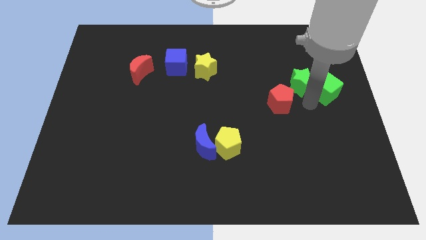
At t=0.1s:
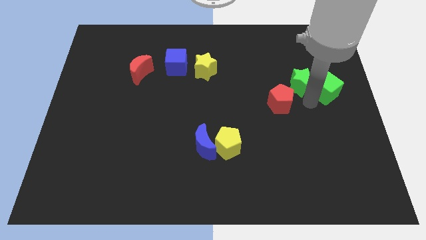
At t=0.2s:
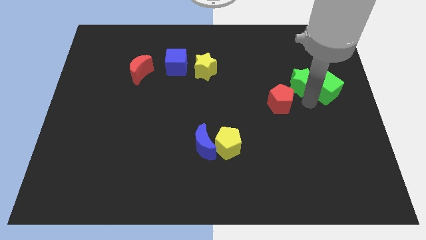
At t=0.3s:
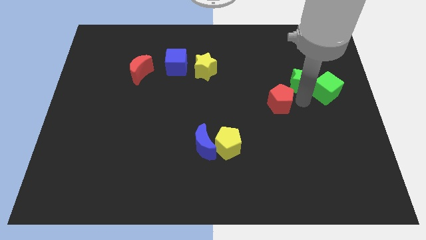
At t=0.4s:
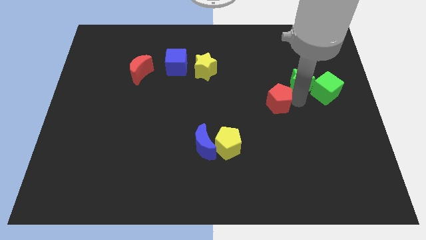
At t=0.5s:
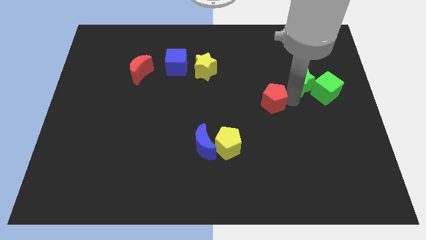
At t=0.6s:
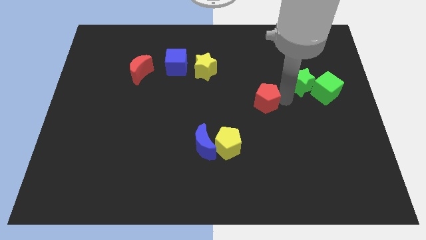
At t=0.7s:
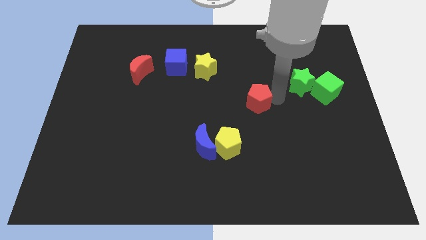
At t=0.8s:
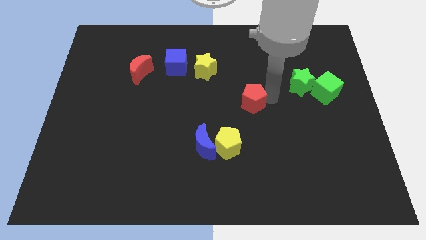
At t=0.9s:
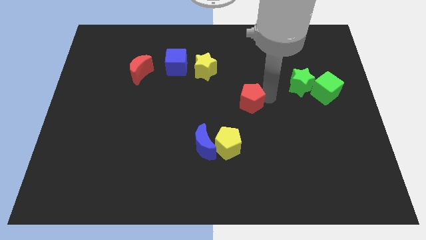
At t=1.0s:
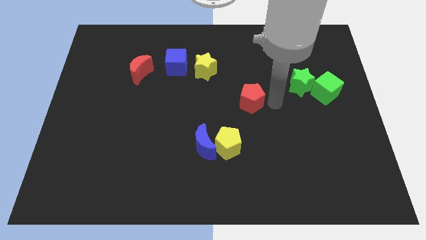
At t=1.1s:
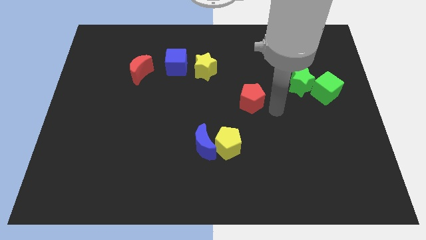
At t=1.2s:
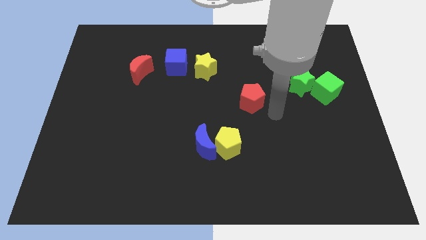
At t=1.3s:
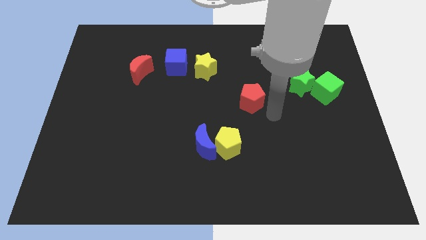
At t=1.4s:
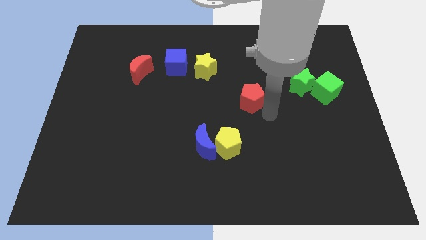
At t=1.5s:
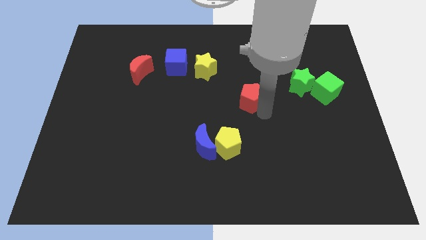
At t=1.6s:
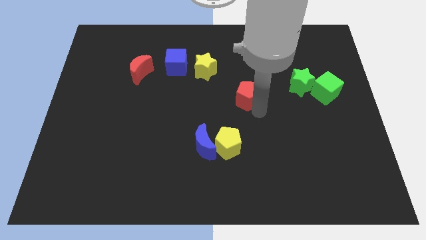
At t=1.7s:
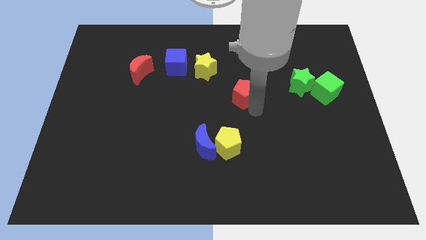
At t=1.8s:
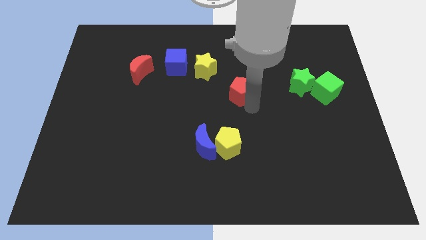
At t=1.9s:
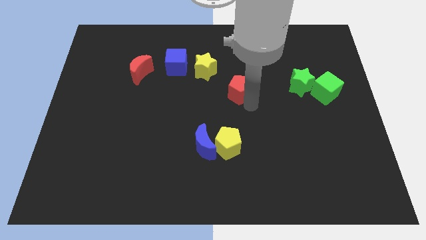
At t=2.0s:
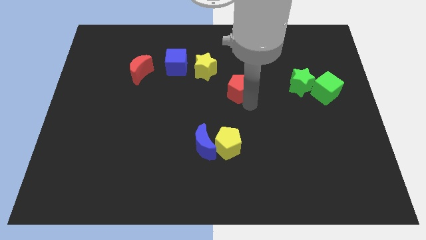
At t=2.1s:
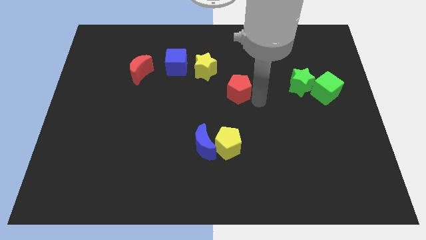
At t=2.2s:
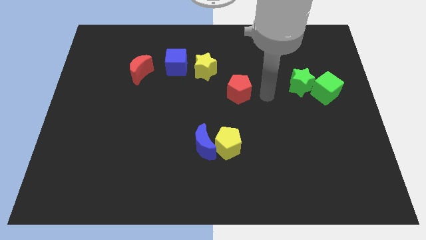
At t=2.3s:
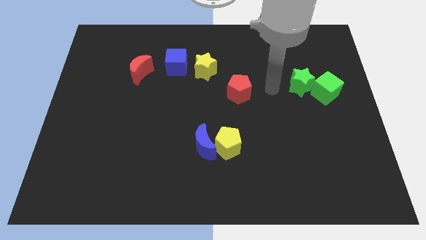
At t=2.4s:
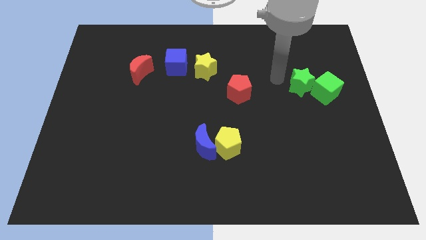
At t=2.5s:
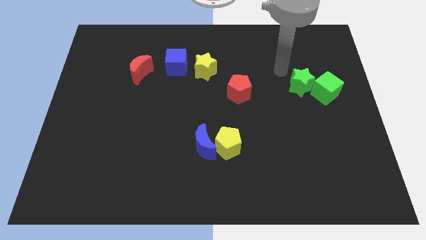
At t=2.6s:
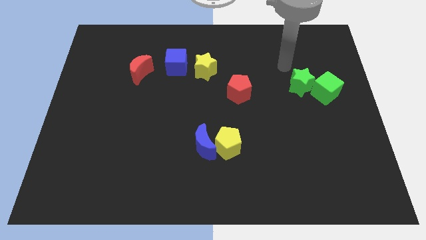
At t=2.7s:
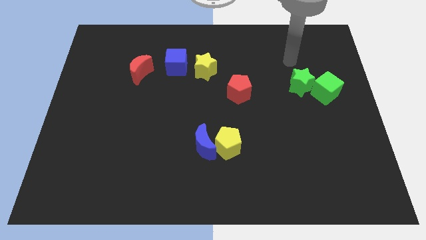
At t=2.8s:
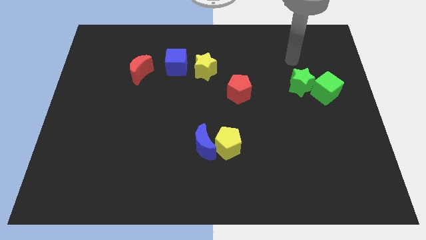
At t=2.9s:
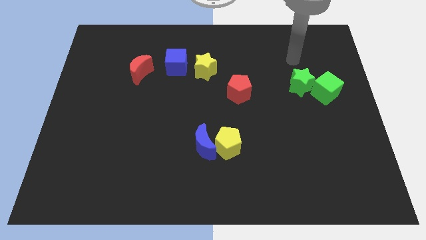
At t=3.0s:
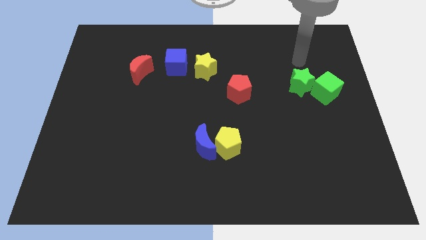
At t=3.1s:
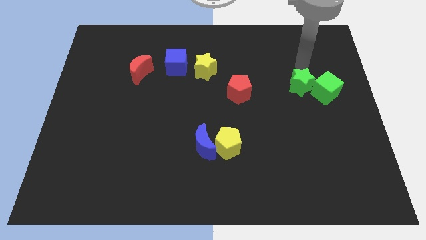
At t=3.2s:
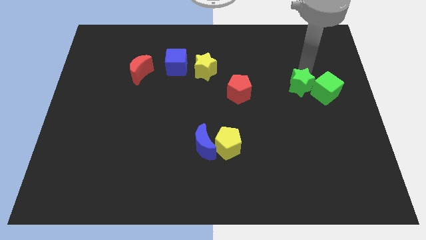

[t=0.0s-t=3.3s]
move the red pentagon to the bottom right of the yellow star

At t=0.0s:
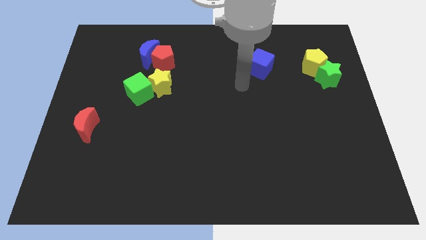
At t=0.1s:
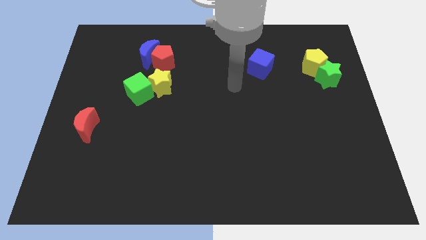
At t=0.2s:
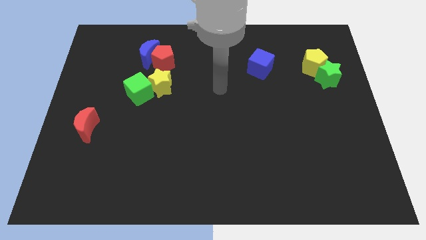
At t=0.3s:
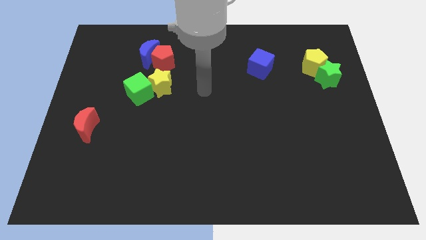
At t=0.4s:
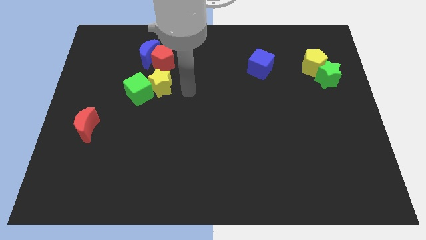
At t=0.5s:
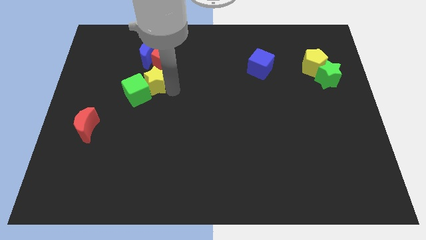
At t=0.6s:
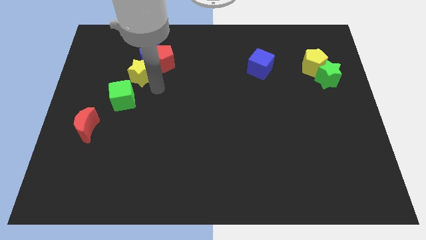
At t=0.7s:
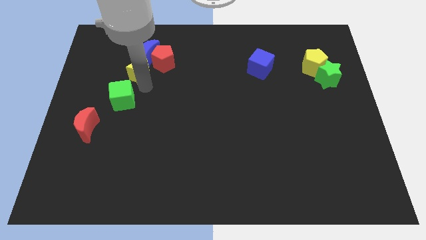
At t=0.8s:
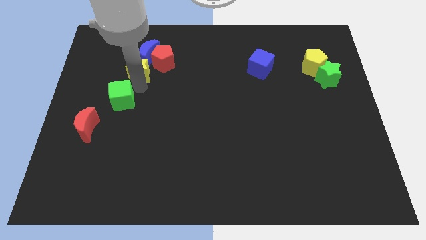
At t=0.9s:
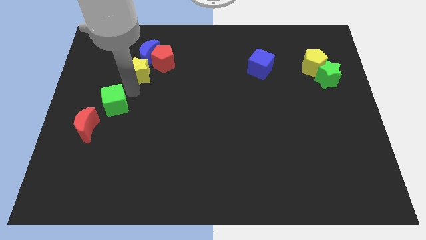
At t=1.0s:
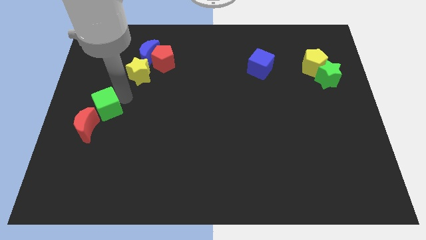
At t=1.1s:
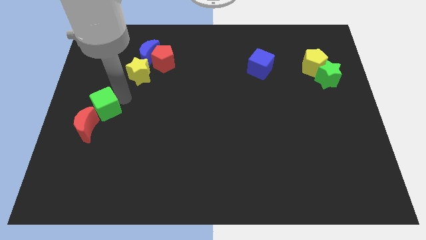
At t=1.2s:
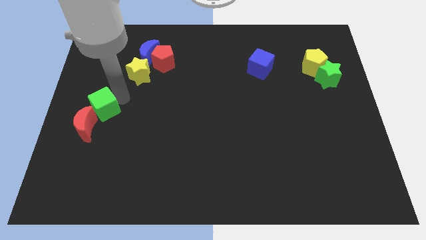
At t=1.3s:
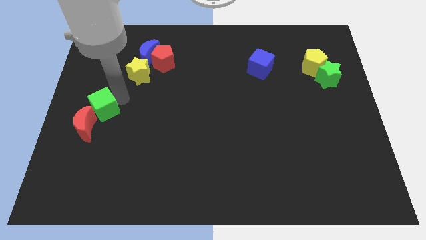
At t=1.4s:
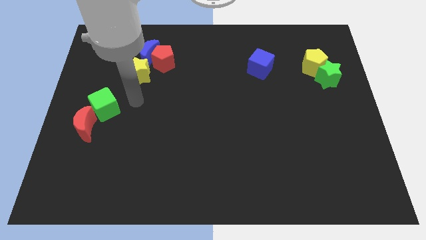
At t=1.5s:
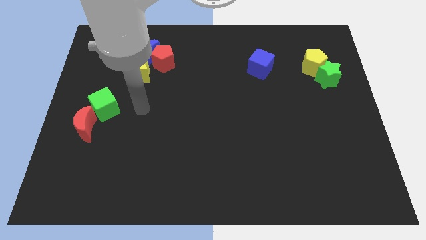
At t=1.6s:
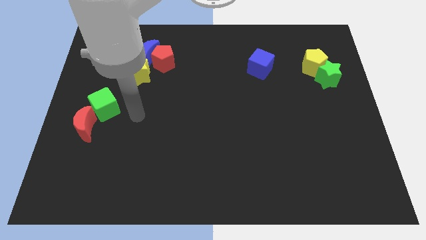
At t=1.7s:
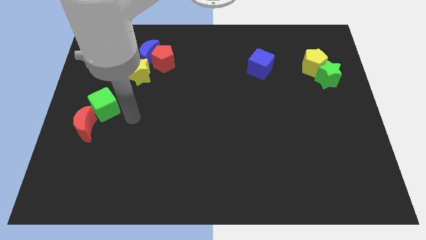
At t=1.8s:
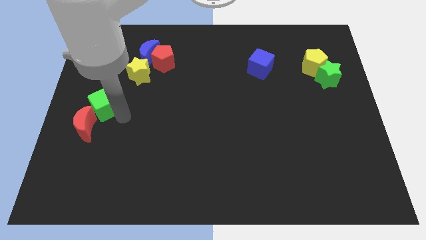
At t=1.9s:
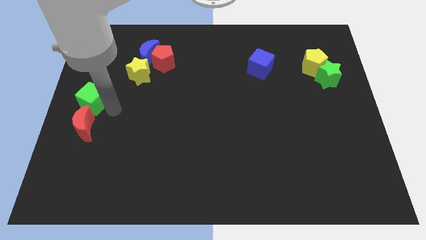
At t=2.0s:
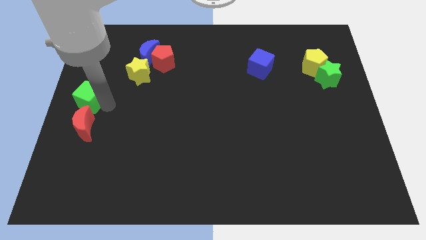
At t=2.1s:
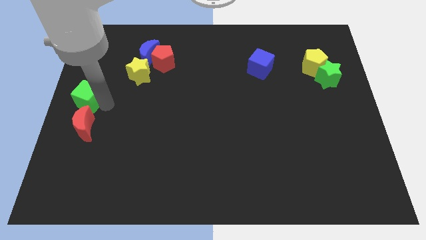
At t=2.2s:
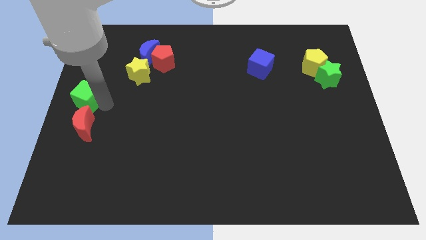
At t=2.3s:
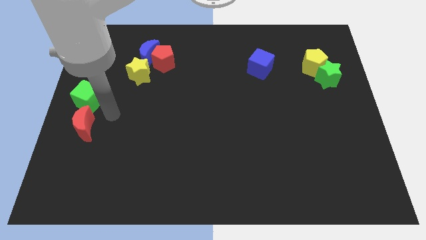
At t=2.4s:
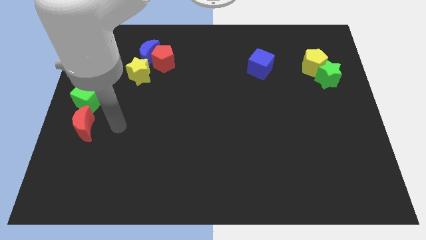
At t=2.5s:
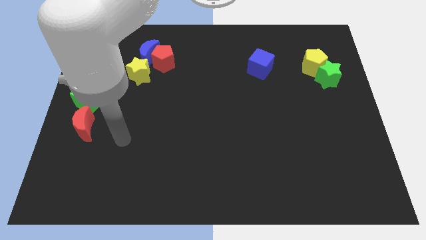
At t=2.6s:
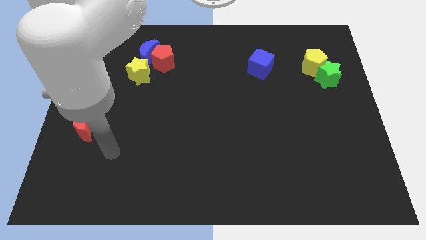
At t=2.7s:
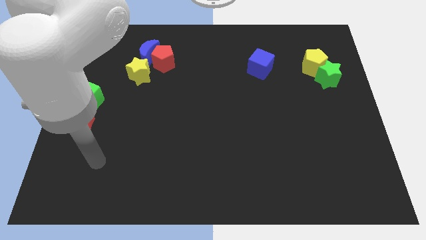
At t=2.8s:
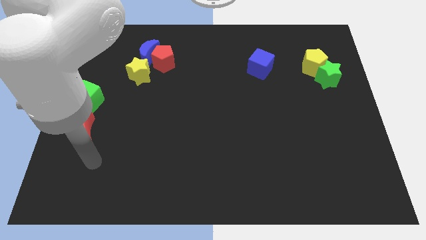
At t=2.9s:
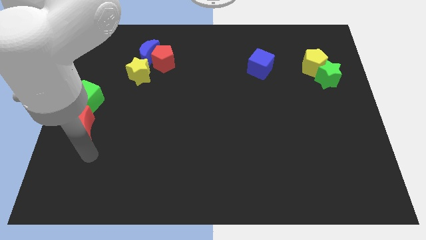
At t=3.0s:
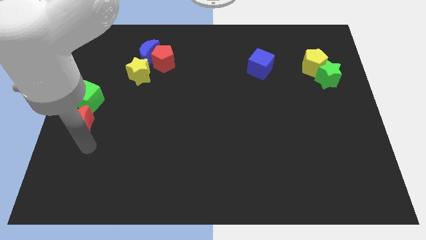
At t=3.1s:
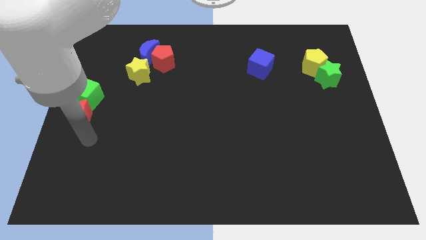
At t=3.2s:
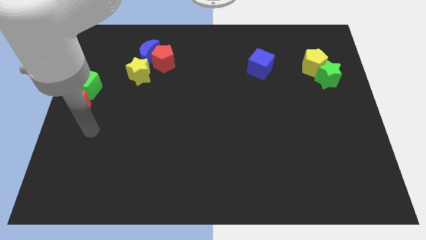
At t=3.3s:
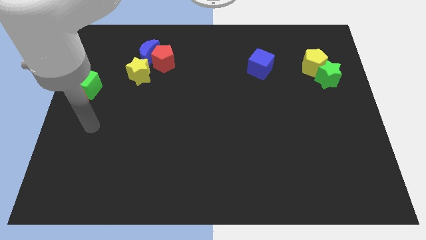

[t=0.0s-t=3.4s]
push the yellow star green cube and red crescent towards the left side of the board

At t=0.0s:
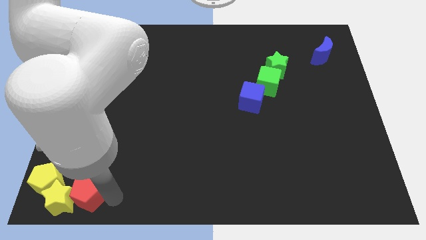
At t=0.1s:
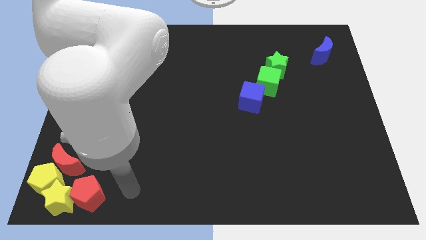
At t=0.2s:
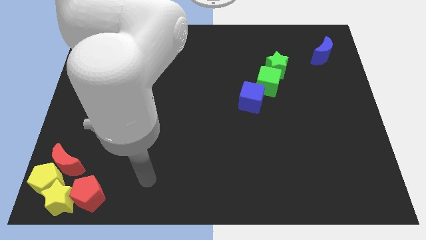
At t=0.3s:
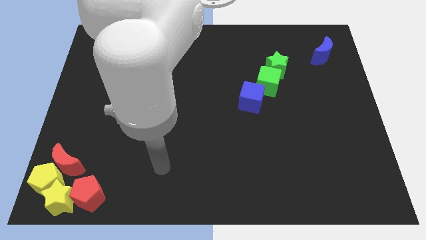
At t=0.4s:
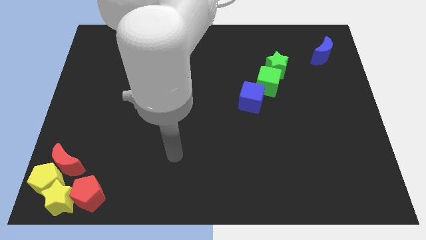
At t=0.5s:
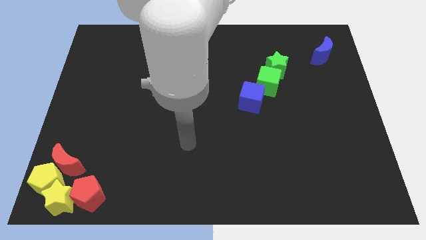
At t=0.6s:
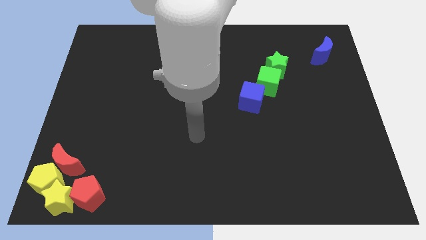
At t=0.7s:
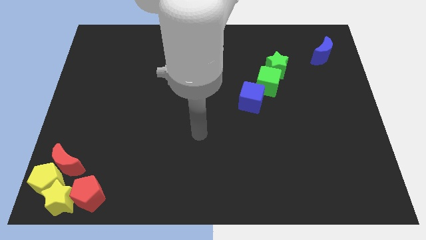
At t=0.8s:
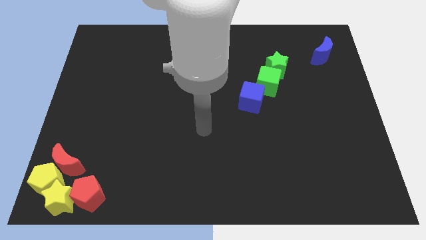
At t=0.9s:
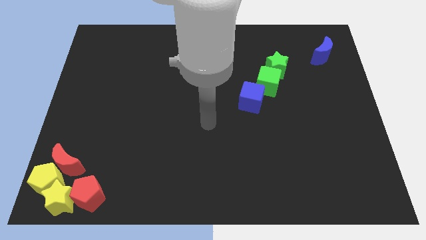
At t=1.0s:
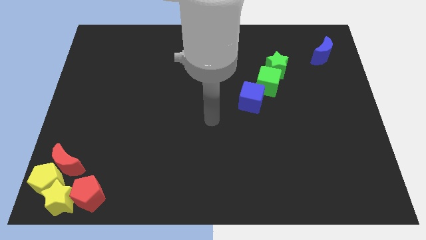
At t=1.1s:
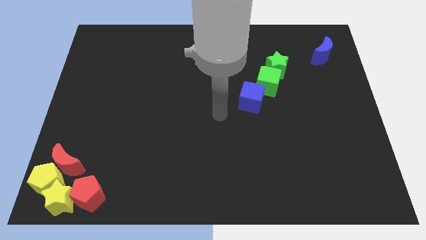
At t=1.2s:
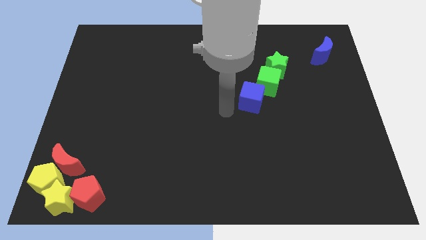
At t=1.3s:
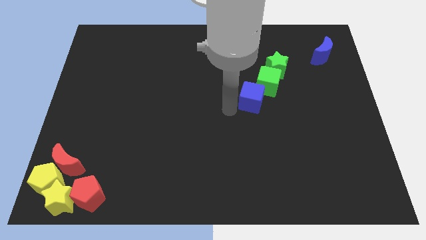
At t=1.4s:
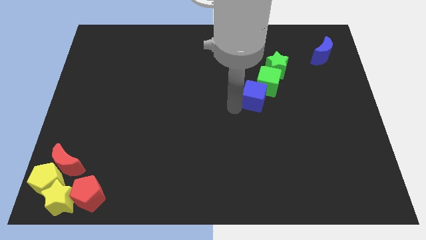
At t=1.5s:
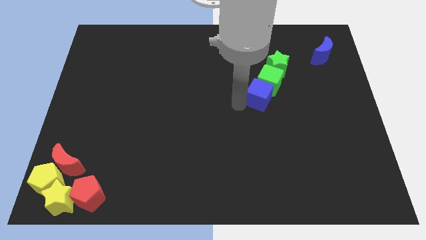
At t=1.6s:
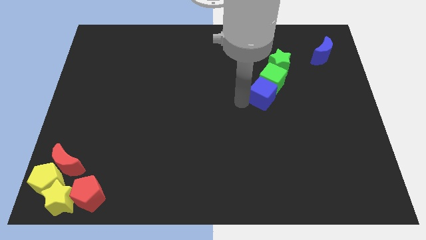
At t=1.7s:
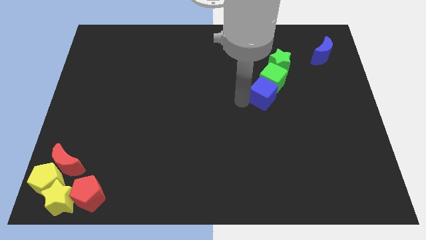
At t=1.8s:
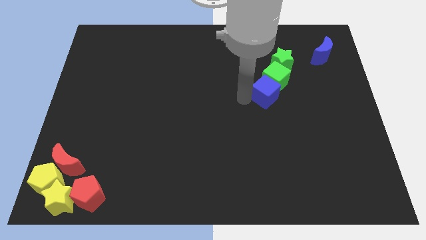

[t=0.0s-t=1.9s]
slide the diagonal line of blocks slightly to the left side of the blue crescent

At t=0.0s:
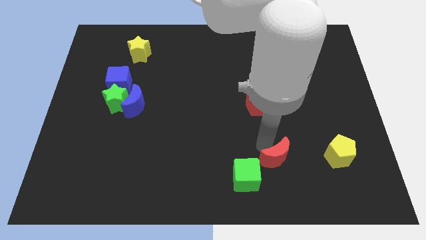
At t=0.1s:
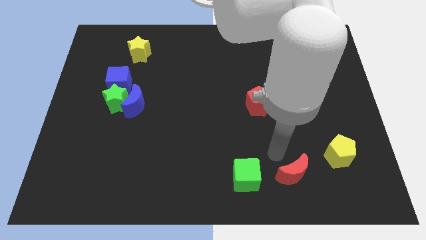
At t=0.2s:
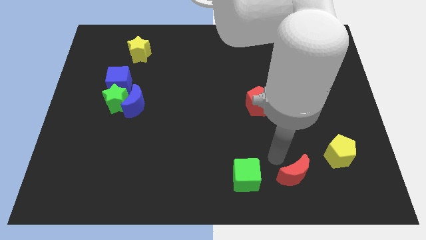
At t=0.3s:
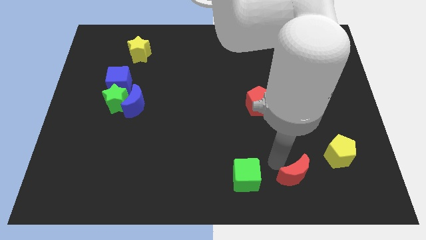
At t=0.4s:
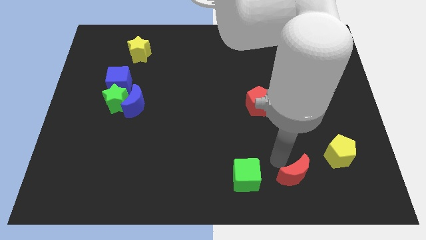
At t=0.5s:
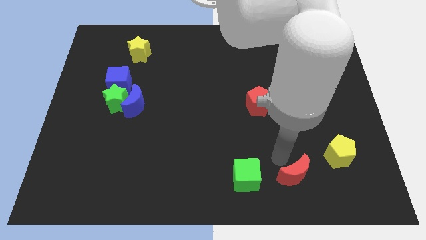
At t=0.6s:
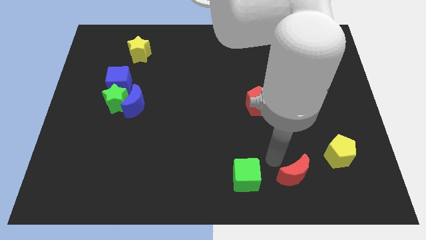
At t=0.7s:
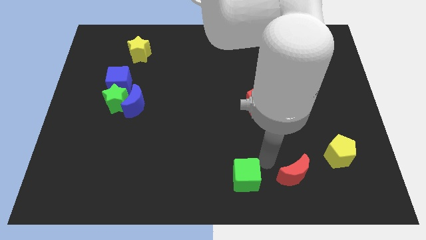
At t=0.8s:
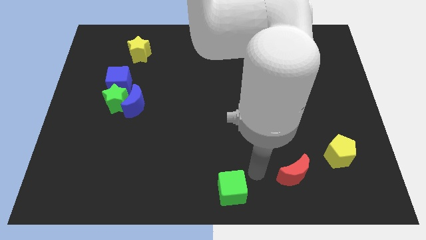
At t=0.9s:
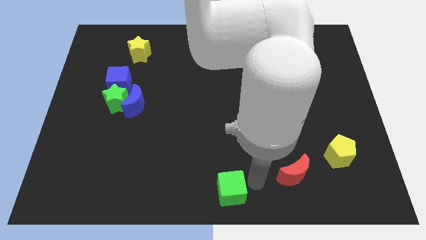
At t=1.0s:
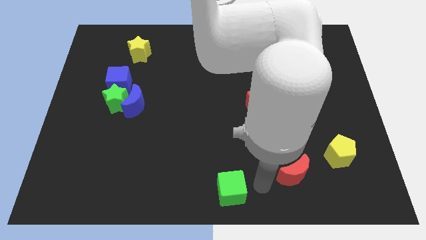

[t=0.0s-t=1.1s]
separate red moon from green star
